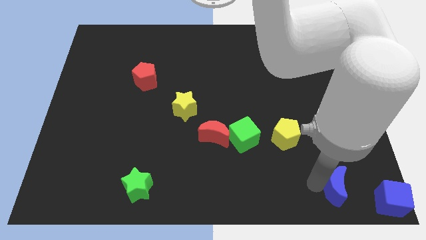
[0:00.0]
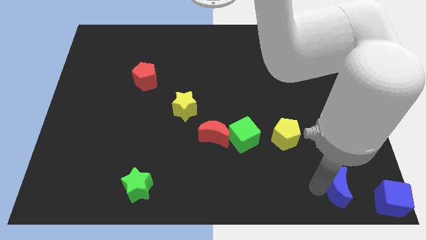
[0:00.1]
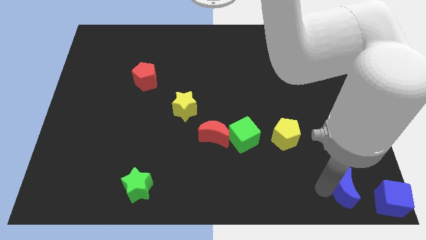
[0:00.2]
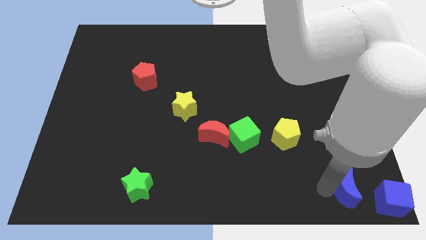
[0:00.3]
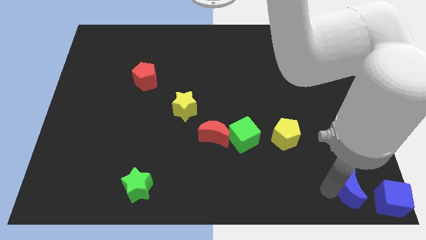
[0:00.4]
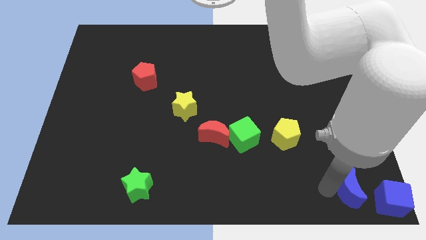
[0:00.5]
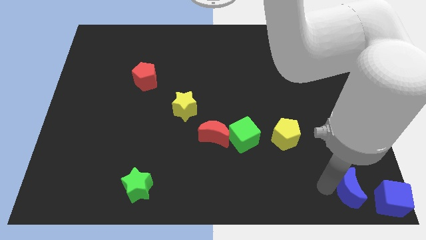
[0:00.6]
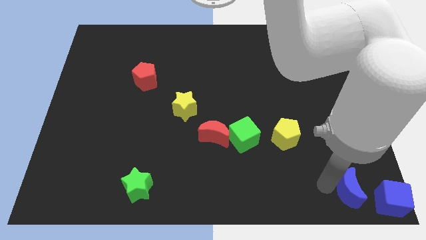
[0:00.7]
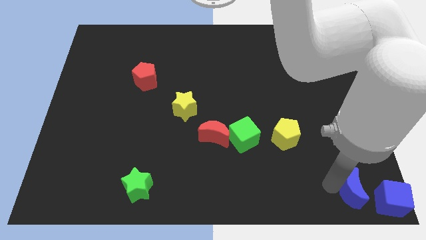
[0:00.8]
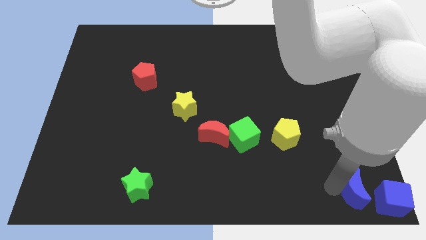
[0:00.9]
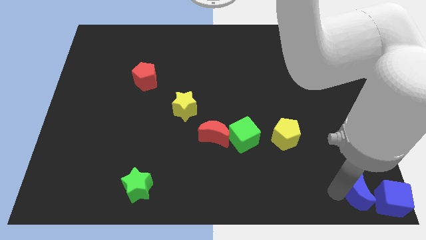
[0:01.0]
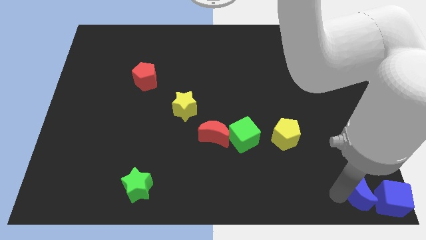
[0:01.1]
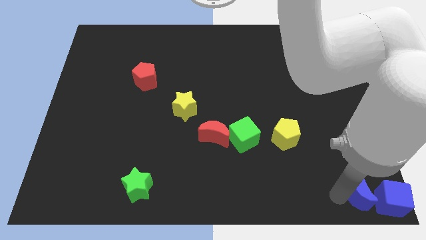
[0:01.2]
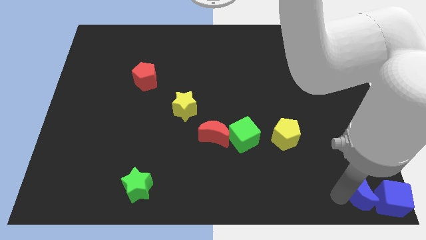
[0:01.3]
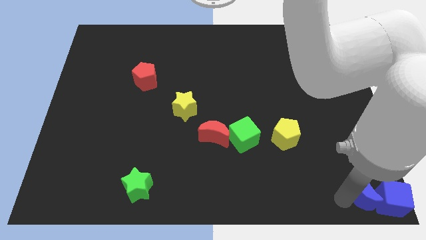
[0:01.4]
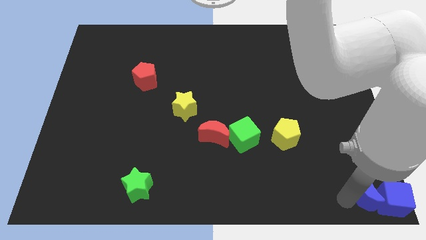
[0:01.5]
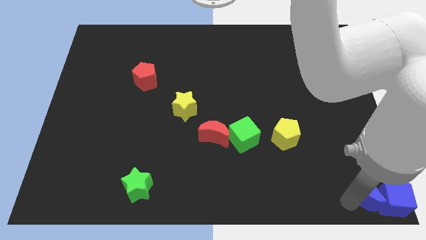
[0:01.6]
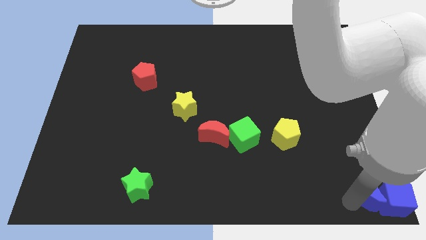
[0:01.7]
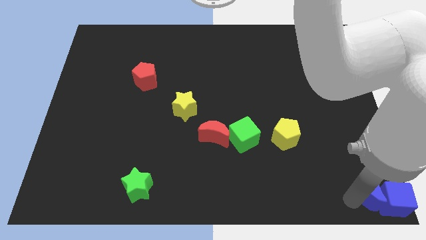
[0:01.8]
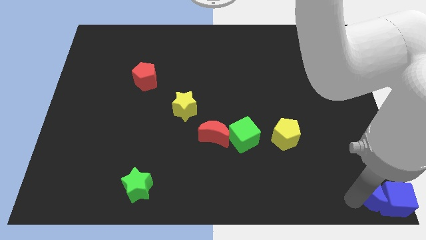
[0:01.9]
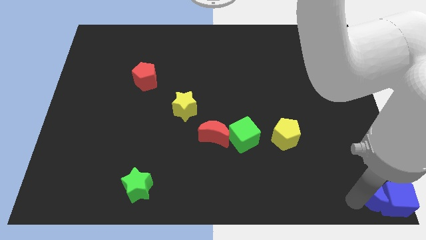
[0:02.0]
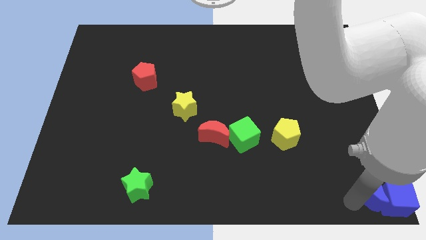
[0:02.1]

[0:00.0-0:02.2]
push the blue moon into the blue cube

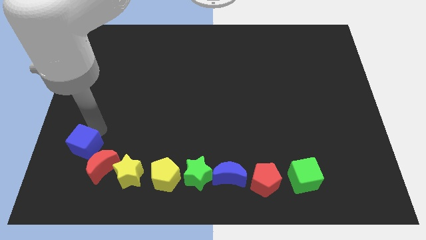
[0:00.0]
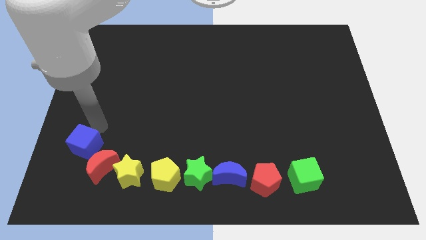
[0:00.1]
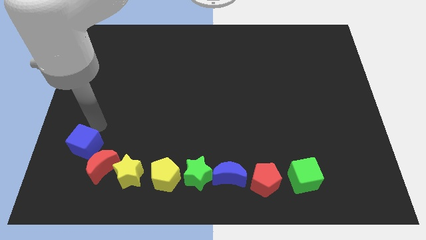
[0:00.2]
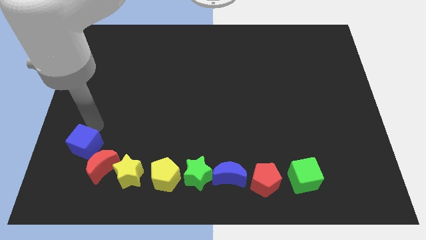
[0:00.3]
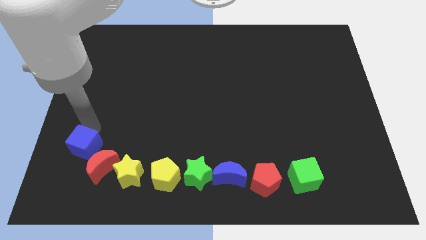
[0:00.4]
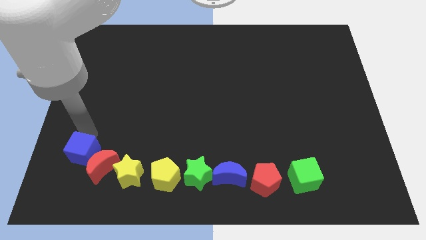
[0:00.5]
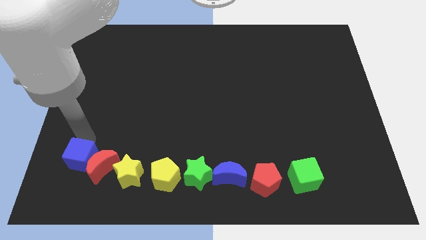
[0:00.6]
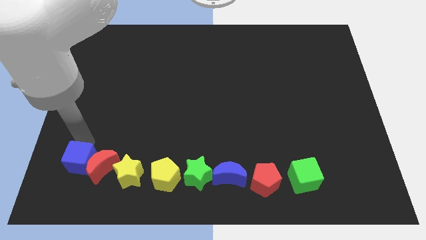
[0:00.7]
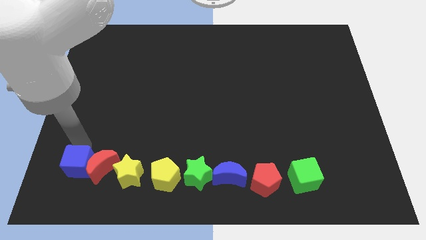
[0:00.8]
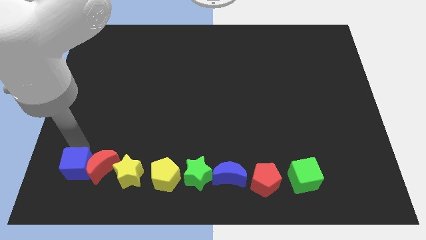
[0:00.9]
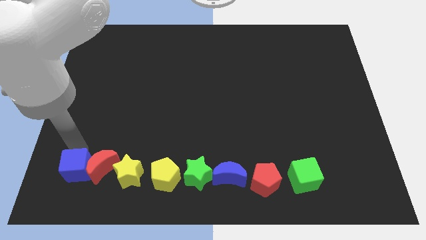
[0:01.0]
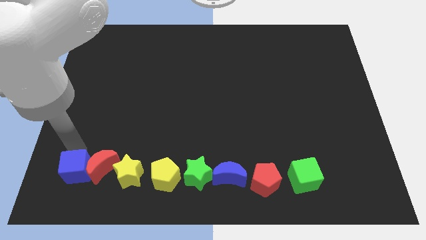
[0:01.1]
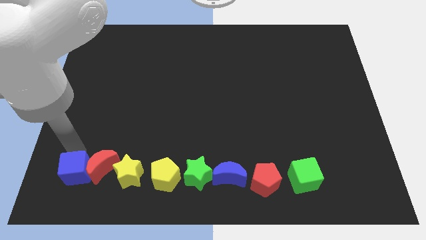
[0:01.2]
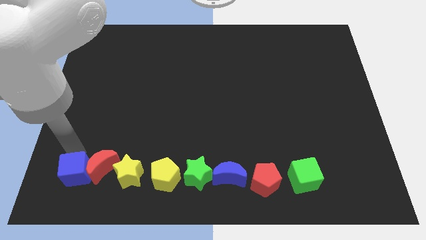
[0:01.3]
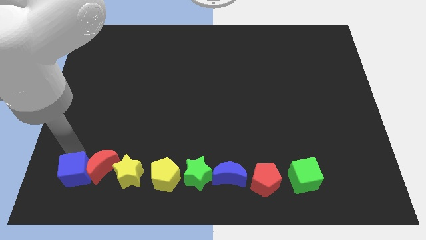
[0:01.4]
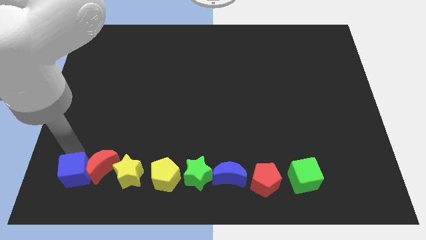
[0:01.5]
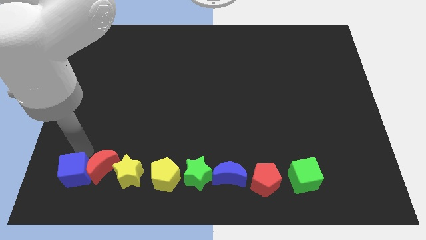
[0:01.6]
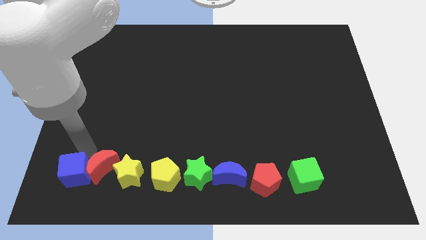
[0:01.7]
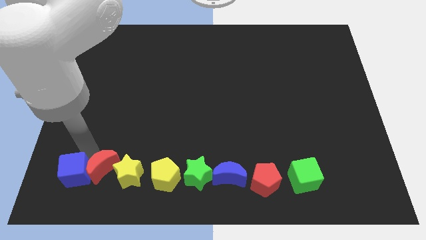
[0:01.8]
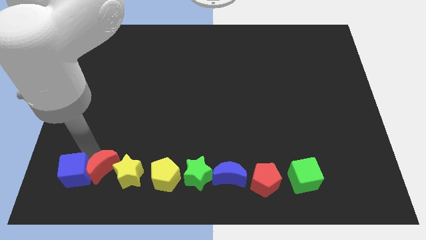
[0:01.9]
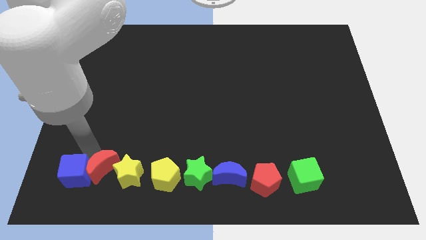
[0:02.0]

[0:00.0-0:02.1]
move the blue cube left to the red moon

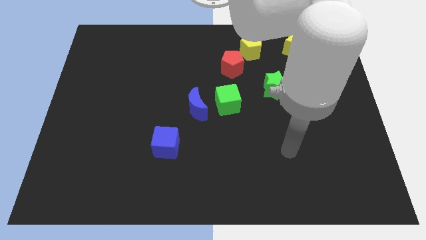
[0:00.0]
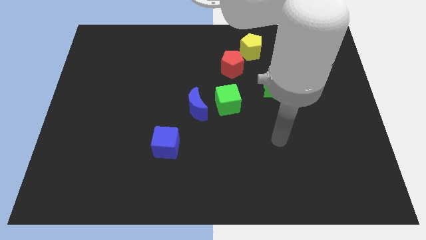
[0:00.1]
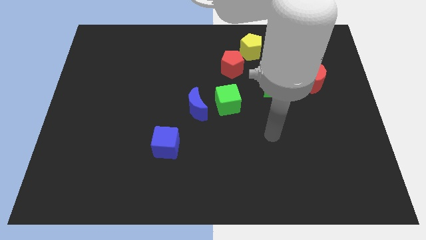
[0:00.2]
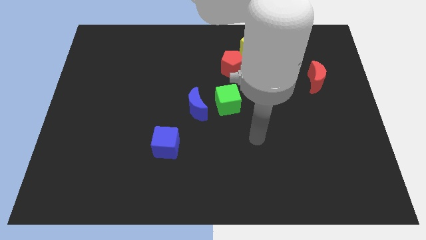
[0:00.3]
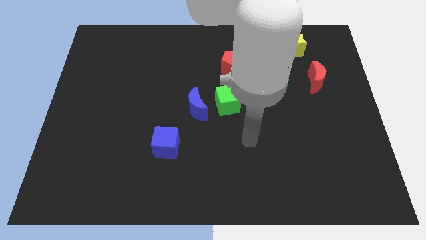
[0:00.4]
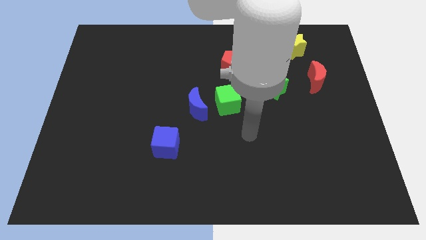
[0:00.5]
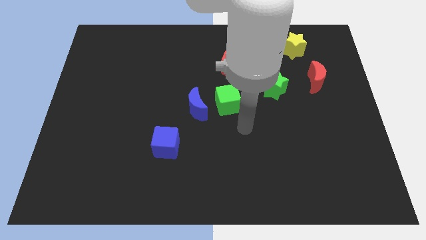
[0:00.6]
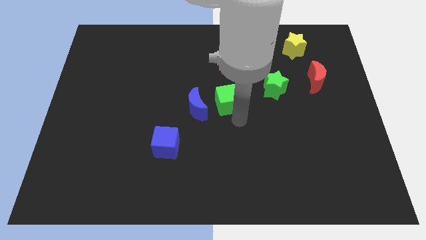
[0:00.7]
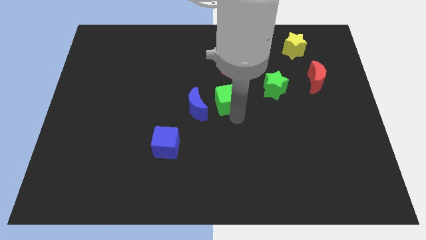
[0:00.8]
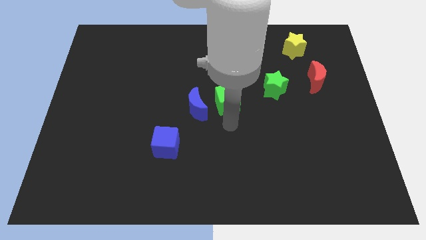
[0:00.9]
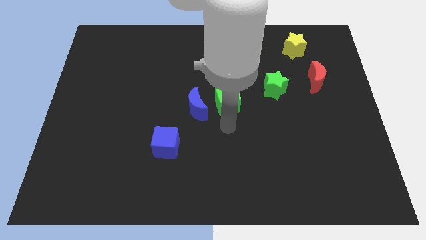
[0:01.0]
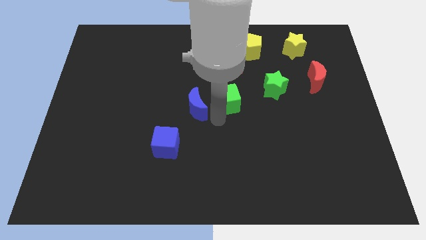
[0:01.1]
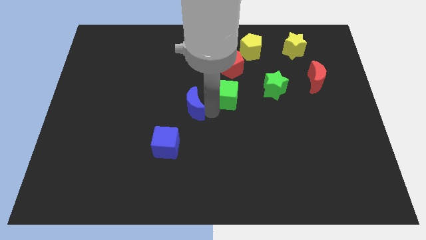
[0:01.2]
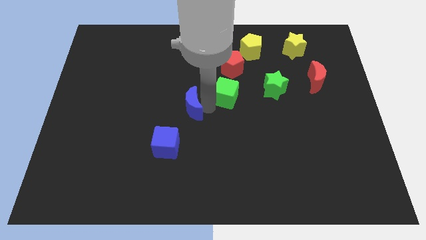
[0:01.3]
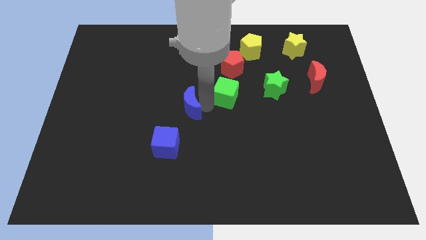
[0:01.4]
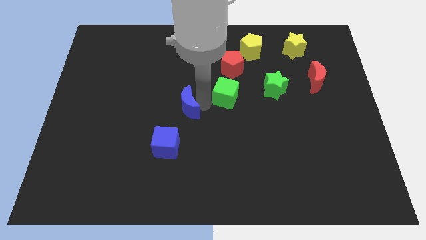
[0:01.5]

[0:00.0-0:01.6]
place your arm in between the blue moon and green cube

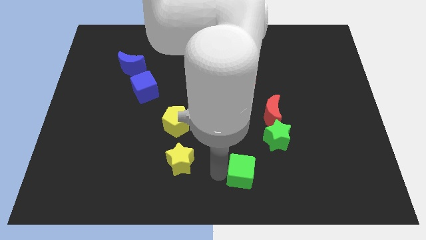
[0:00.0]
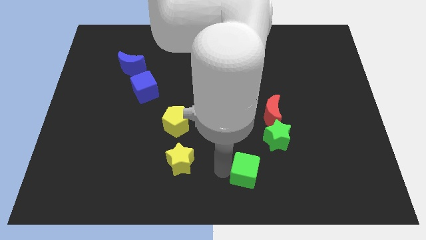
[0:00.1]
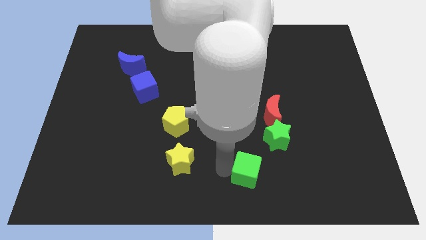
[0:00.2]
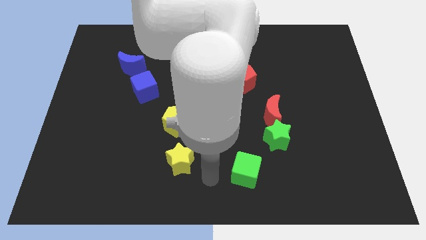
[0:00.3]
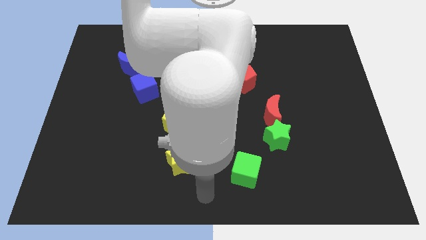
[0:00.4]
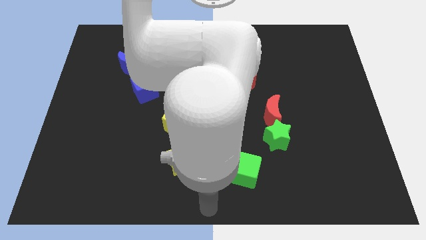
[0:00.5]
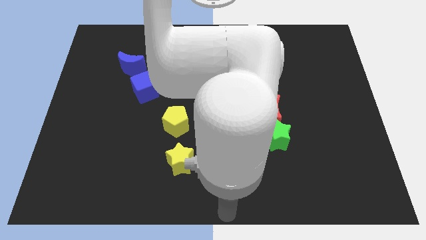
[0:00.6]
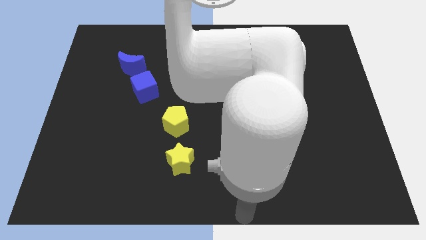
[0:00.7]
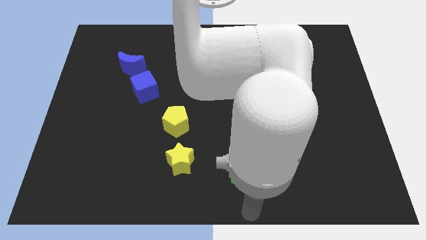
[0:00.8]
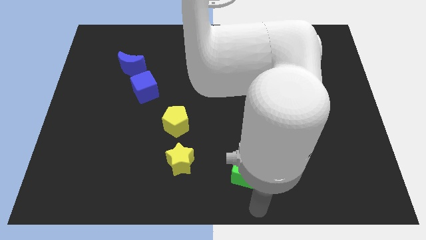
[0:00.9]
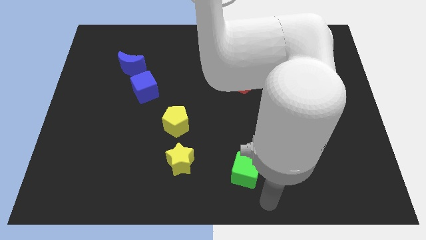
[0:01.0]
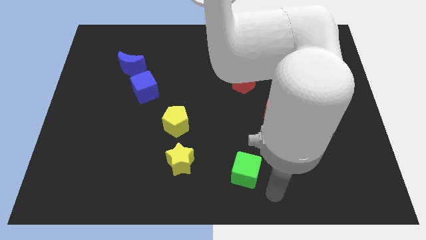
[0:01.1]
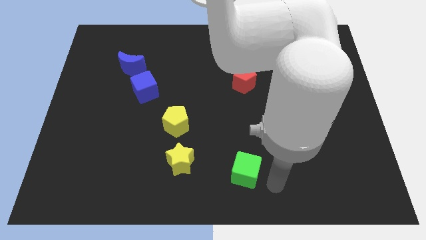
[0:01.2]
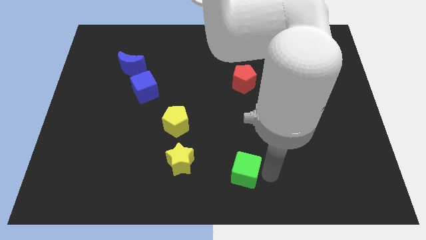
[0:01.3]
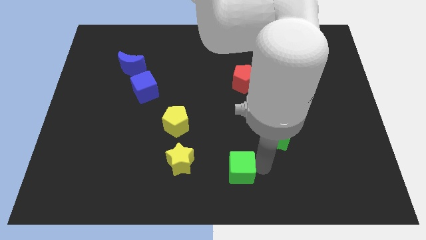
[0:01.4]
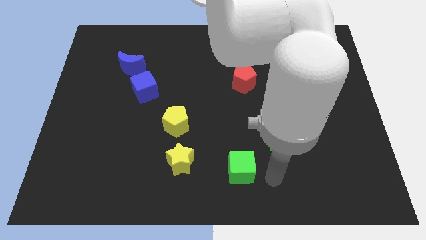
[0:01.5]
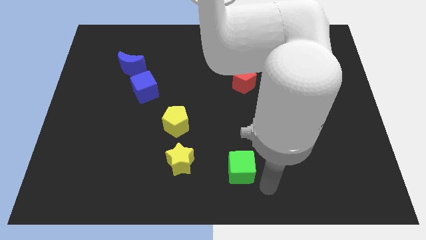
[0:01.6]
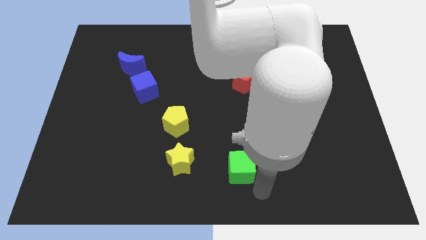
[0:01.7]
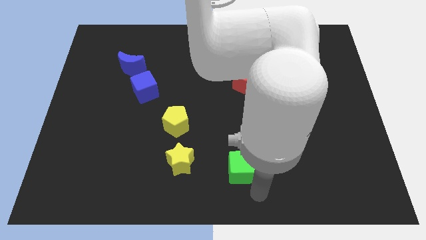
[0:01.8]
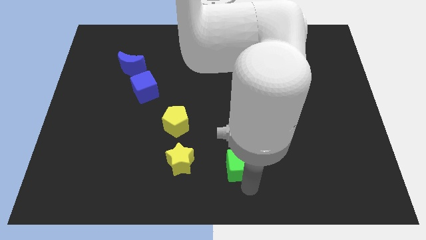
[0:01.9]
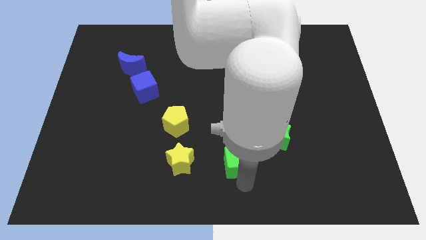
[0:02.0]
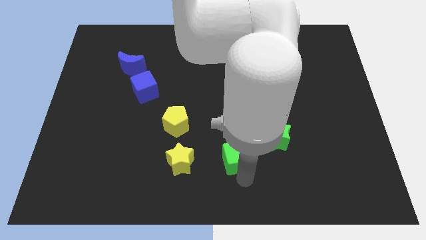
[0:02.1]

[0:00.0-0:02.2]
place the green cube to the right of the yellow star

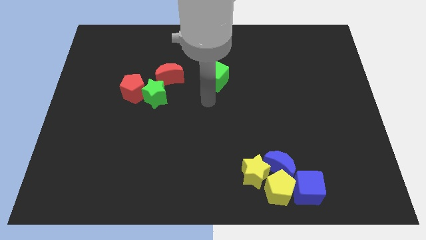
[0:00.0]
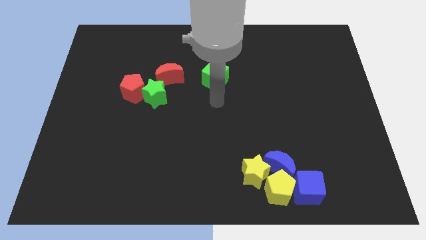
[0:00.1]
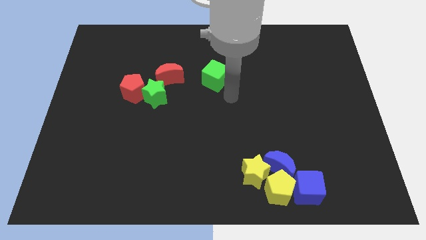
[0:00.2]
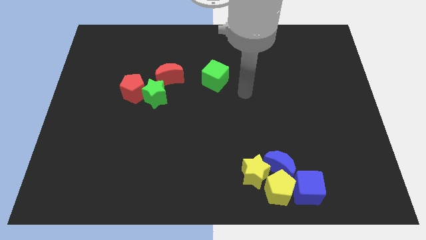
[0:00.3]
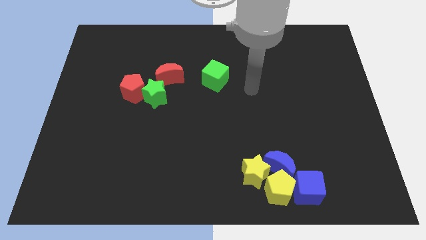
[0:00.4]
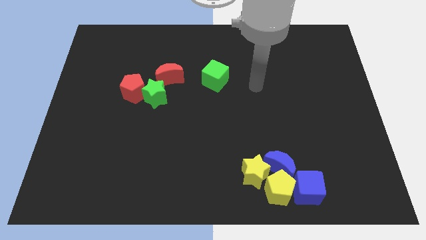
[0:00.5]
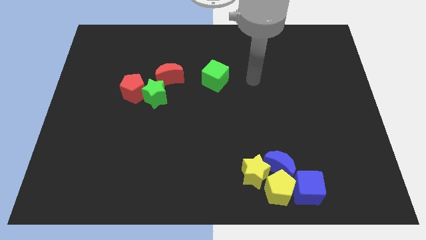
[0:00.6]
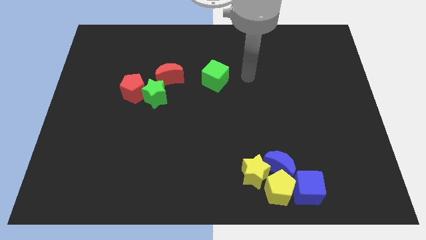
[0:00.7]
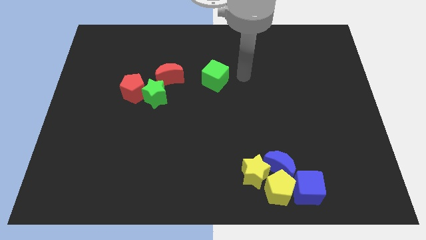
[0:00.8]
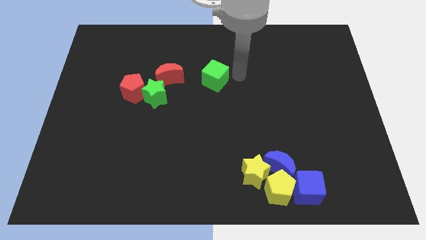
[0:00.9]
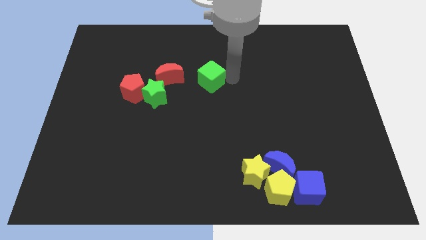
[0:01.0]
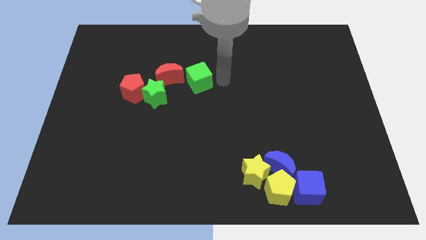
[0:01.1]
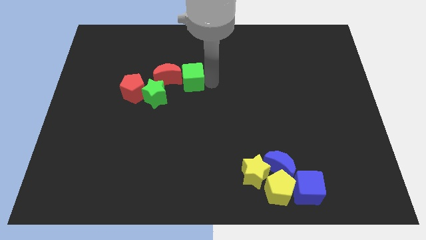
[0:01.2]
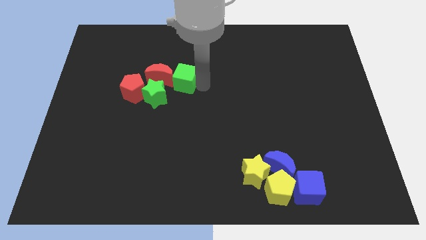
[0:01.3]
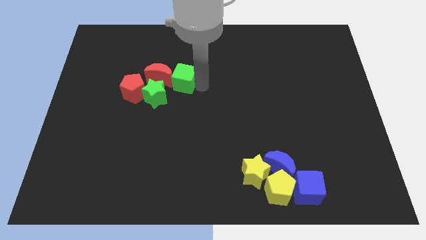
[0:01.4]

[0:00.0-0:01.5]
push the green cube into the red crescent
